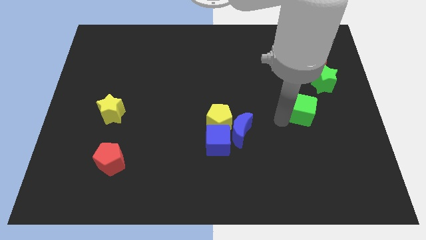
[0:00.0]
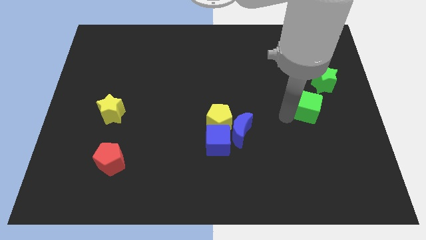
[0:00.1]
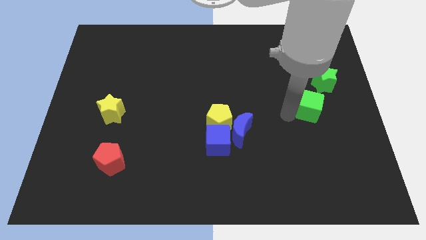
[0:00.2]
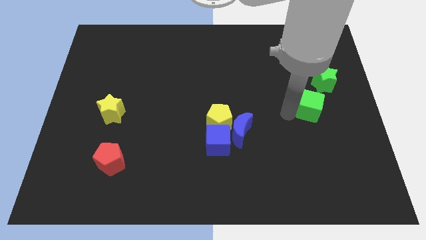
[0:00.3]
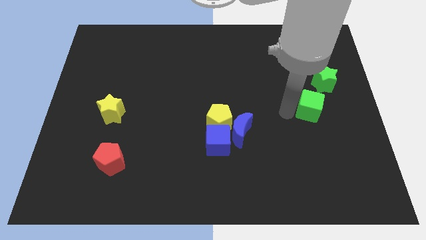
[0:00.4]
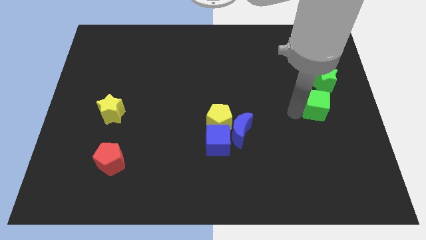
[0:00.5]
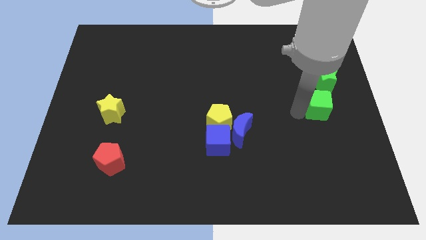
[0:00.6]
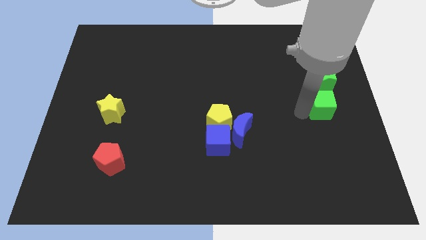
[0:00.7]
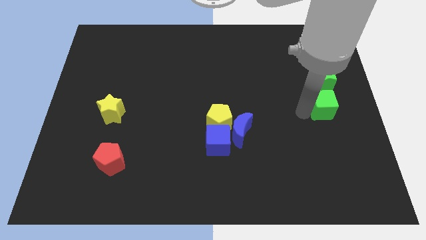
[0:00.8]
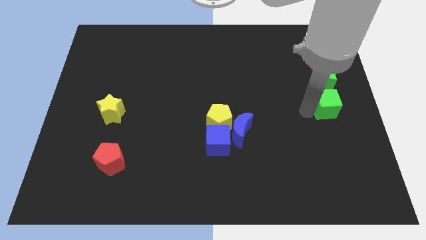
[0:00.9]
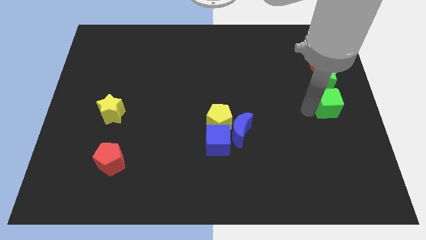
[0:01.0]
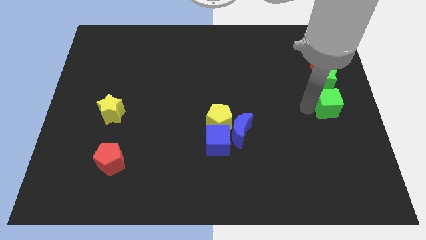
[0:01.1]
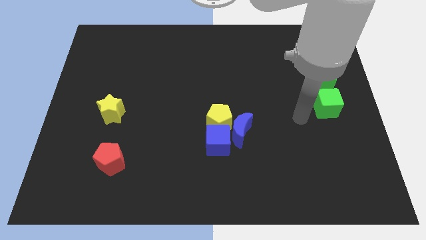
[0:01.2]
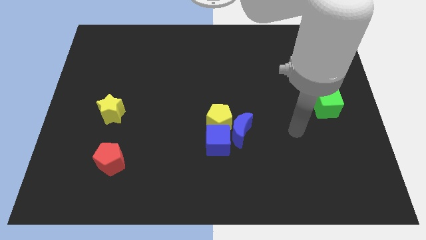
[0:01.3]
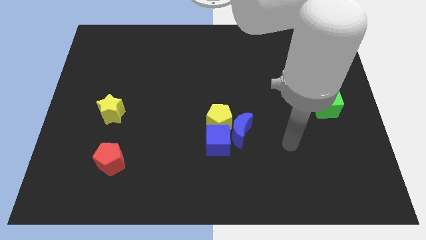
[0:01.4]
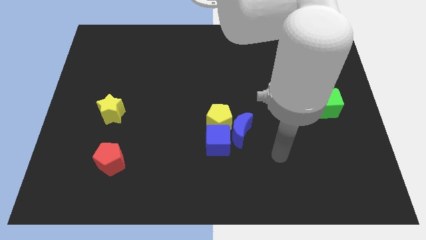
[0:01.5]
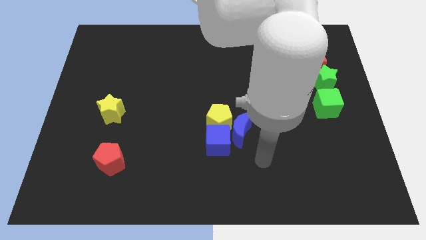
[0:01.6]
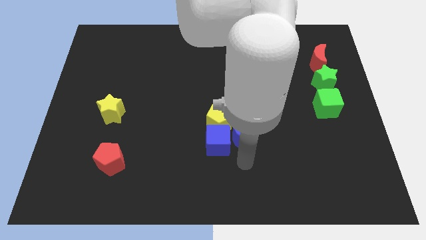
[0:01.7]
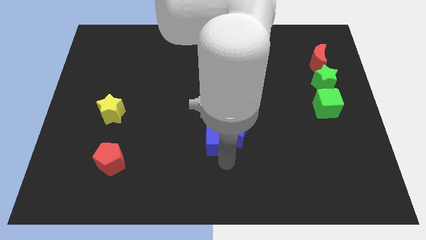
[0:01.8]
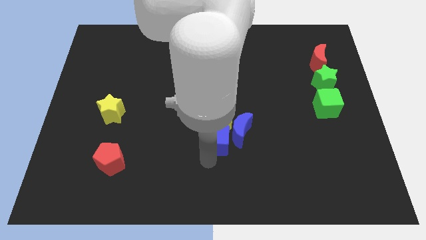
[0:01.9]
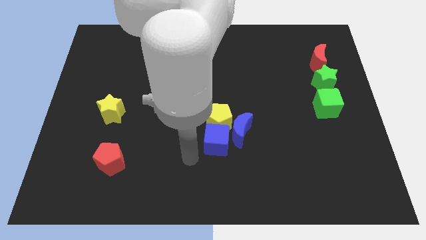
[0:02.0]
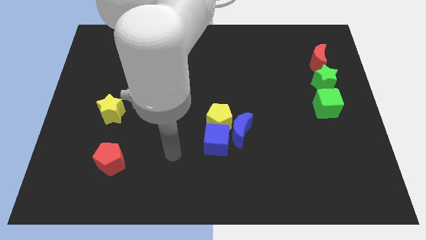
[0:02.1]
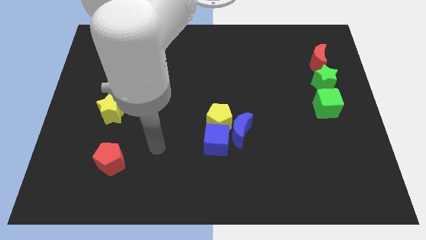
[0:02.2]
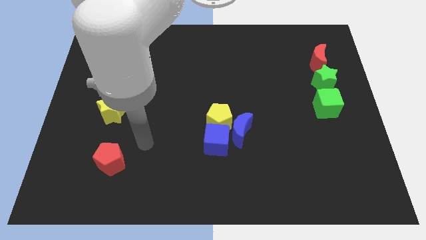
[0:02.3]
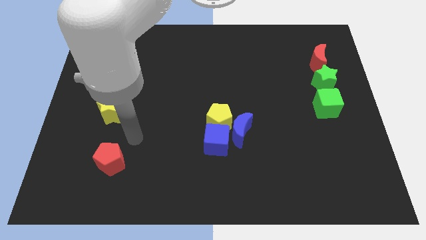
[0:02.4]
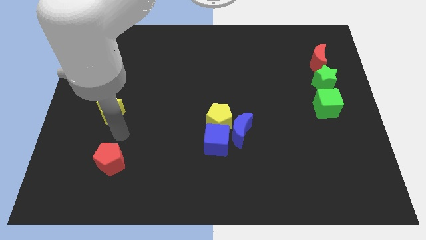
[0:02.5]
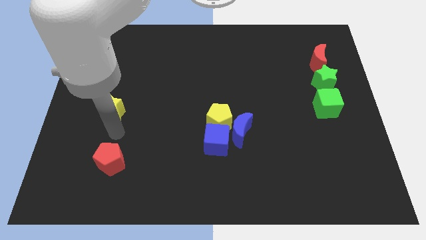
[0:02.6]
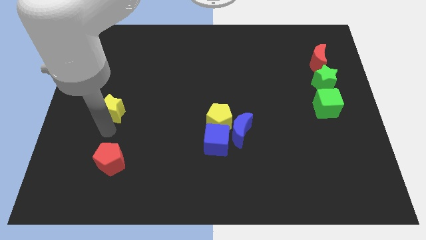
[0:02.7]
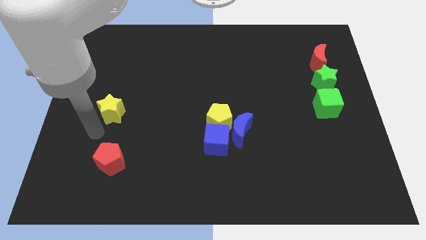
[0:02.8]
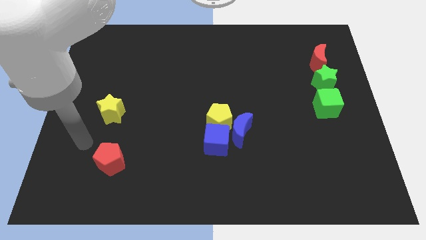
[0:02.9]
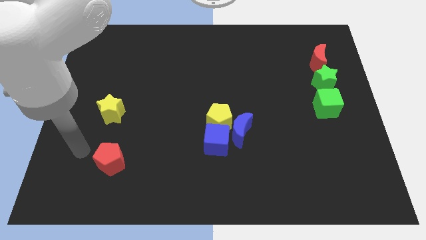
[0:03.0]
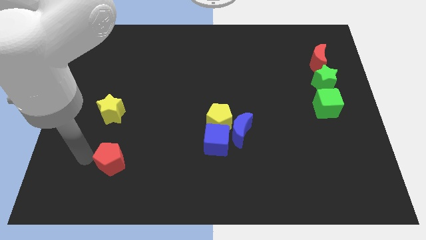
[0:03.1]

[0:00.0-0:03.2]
move your arm away form the green cube

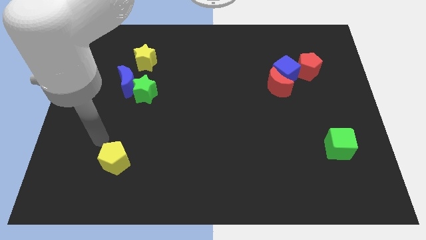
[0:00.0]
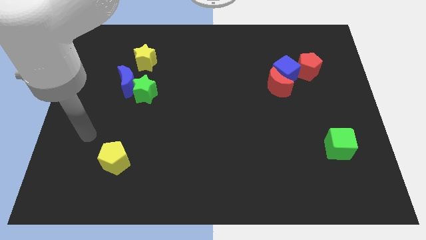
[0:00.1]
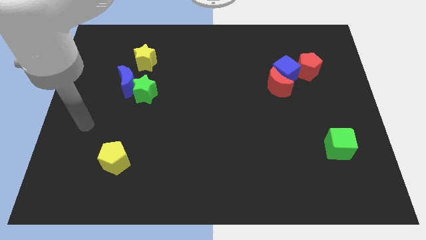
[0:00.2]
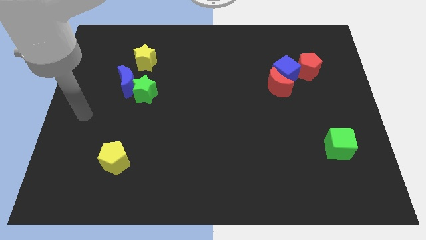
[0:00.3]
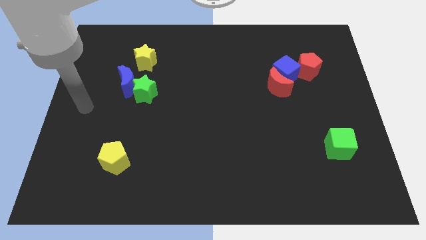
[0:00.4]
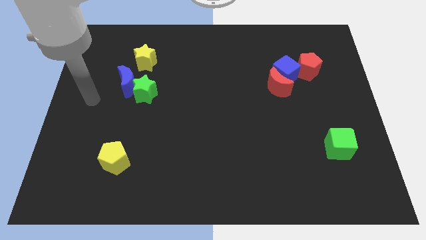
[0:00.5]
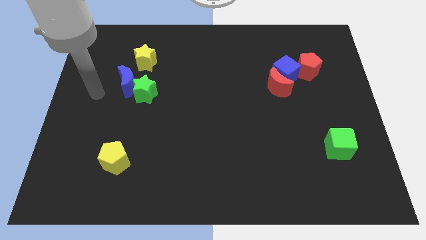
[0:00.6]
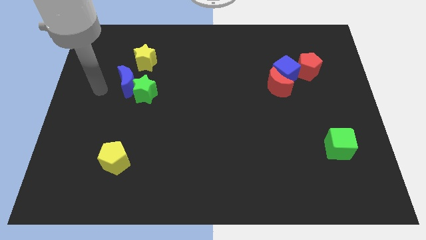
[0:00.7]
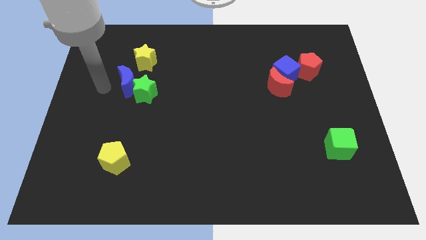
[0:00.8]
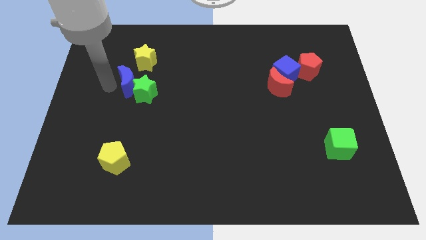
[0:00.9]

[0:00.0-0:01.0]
move your arm away from the yellow pentagon

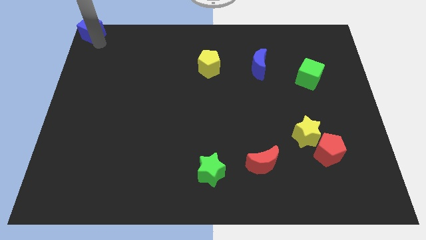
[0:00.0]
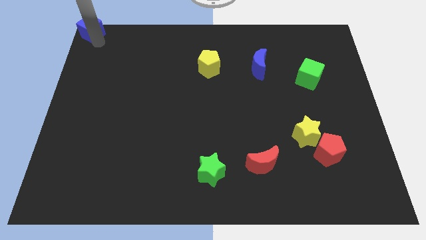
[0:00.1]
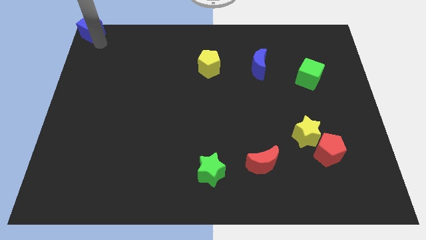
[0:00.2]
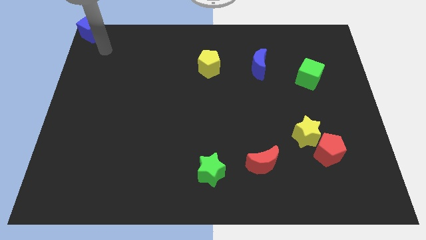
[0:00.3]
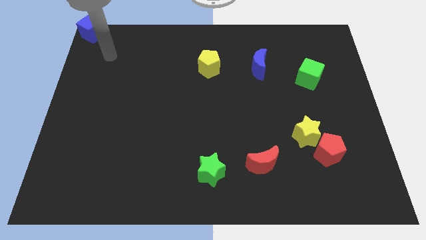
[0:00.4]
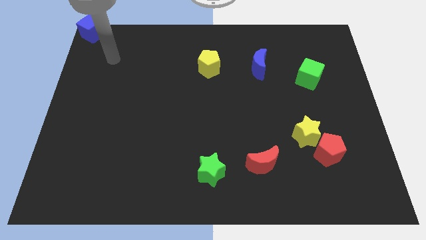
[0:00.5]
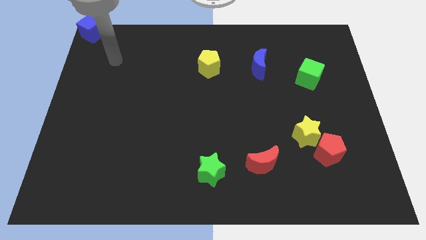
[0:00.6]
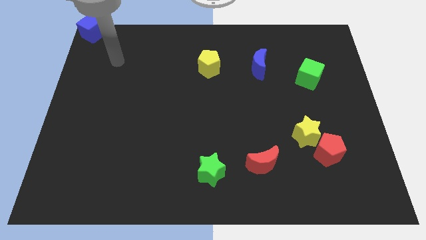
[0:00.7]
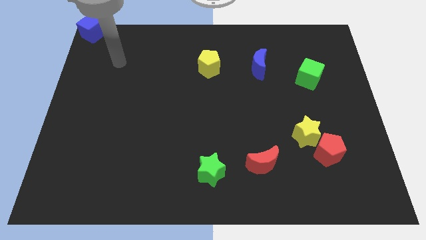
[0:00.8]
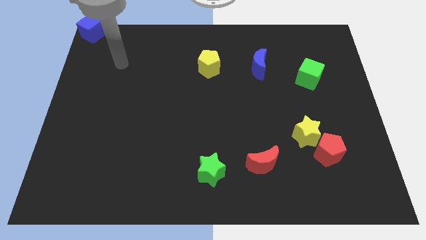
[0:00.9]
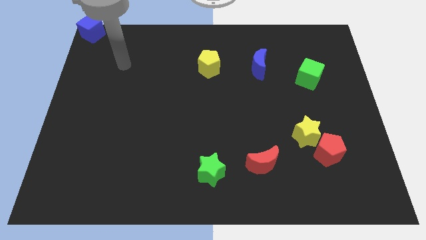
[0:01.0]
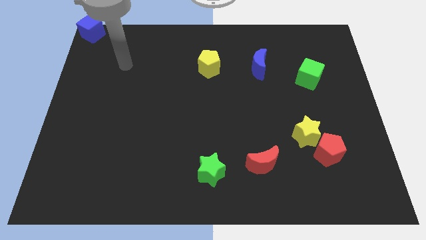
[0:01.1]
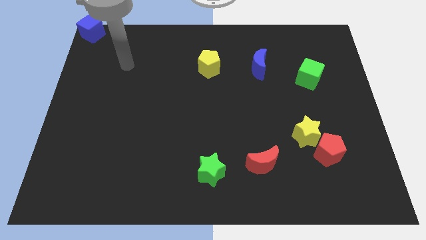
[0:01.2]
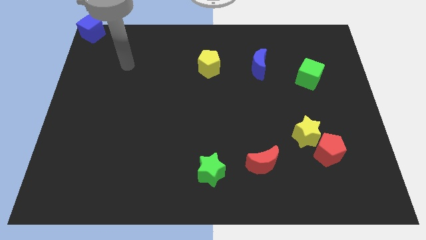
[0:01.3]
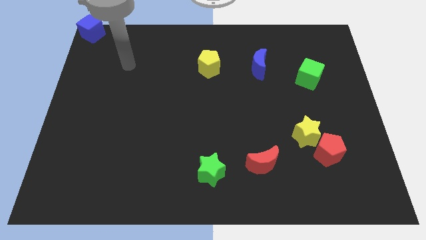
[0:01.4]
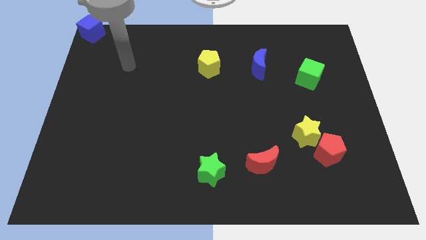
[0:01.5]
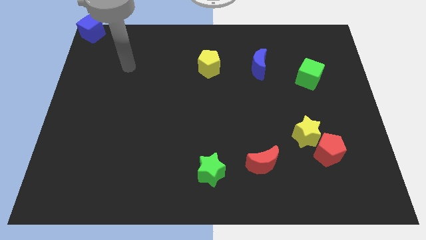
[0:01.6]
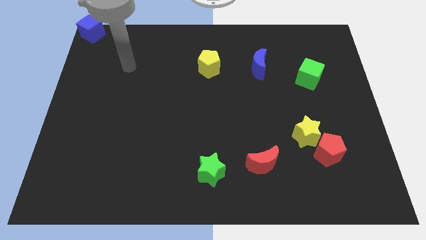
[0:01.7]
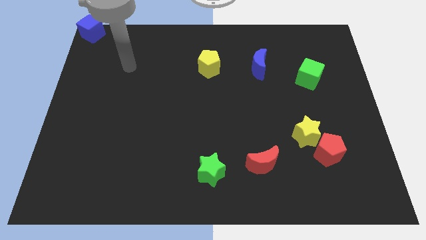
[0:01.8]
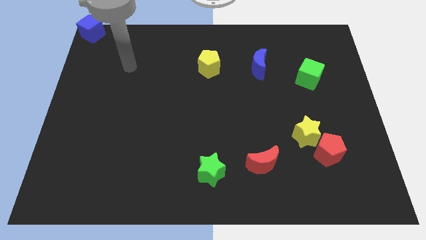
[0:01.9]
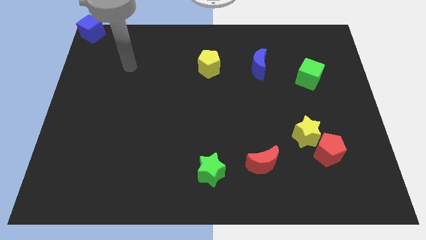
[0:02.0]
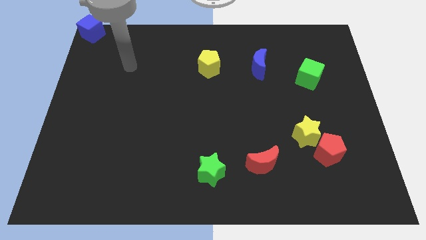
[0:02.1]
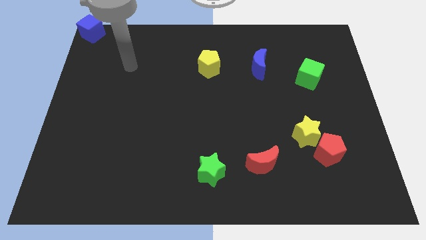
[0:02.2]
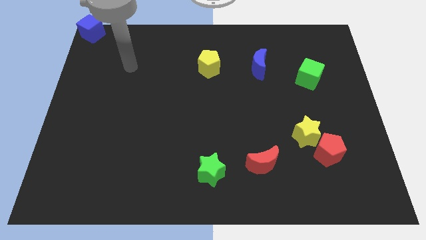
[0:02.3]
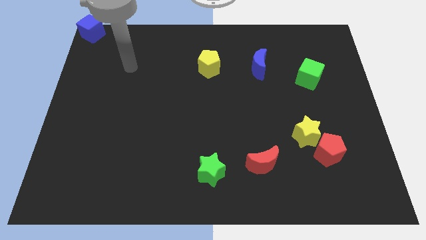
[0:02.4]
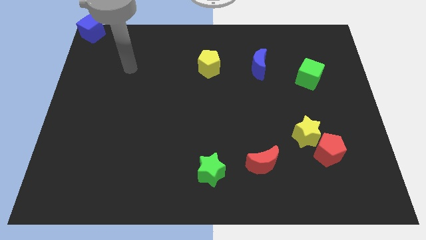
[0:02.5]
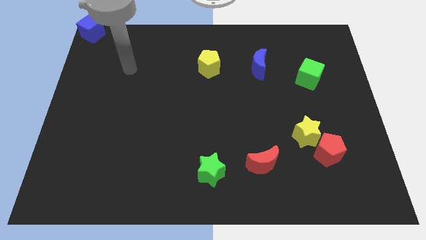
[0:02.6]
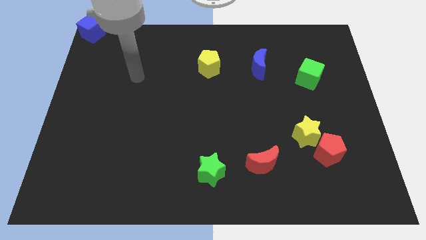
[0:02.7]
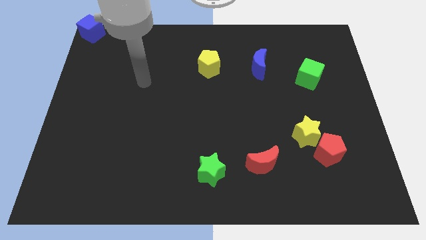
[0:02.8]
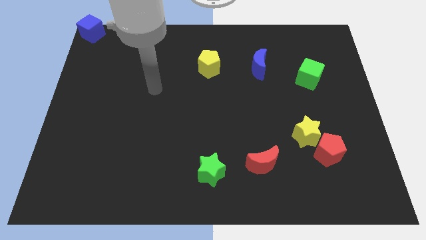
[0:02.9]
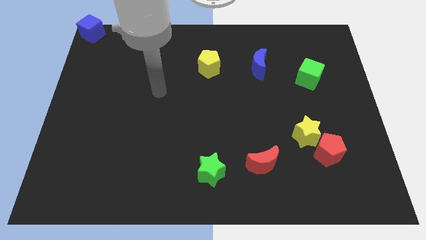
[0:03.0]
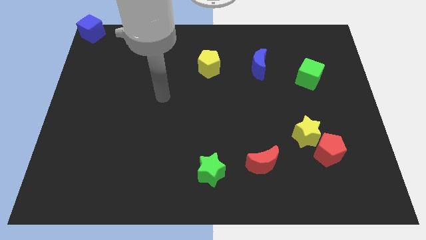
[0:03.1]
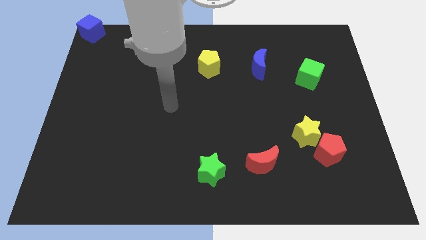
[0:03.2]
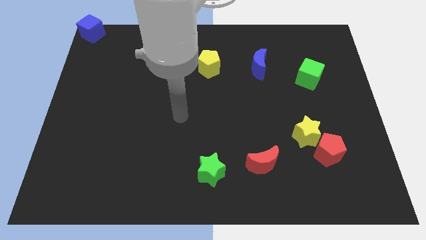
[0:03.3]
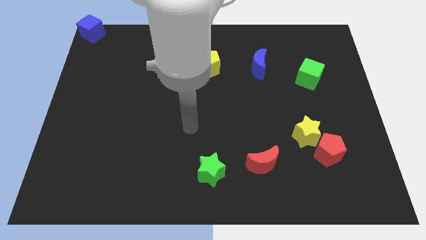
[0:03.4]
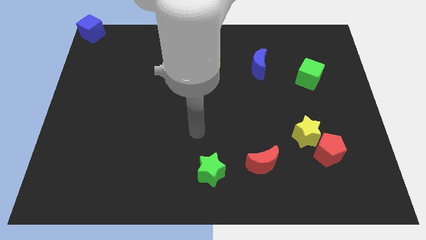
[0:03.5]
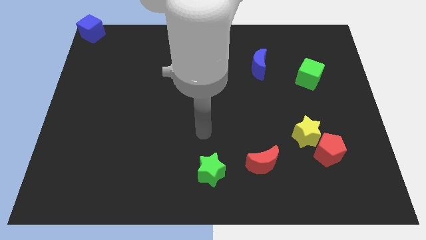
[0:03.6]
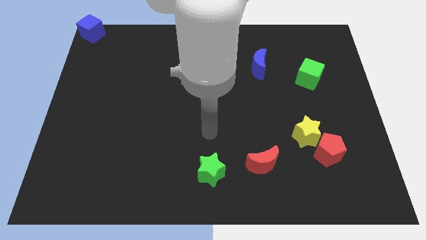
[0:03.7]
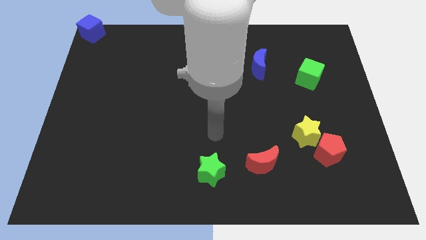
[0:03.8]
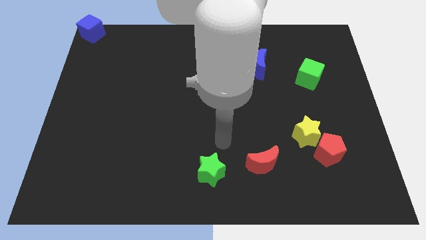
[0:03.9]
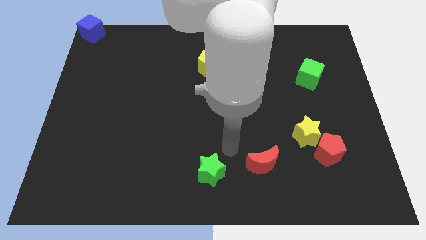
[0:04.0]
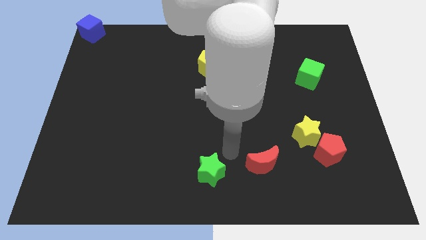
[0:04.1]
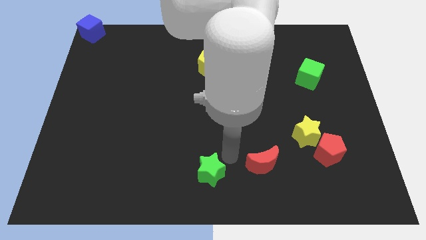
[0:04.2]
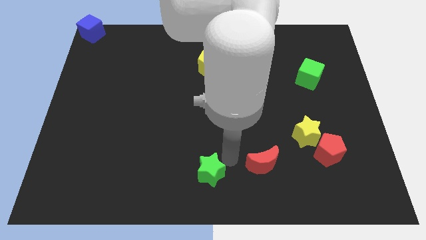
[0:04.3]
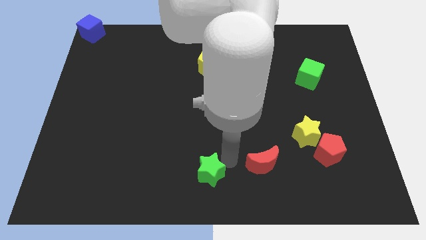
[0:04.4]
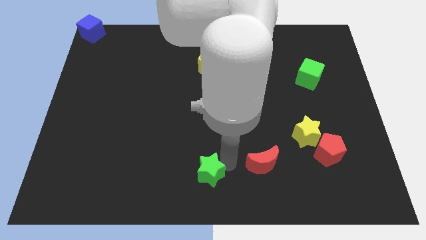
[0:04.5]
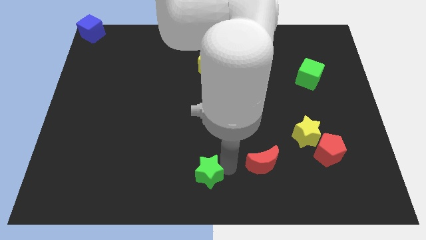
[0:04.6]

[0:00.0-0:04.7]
slide the green star slightly down
